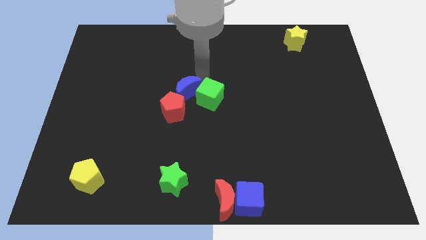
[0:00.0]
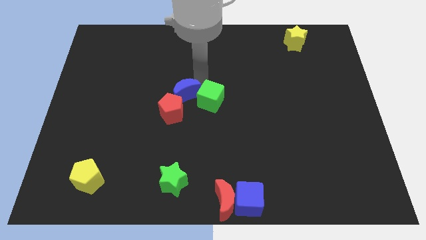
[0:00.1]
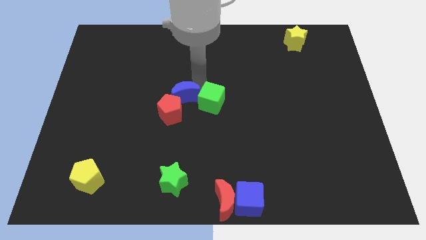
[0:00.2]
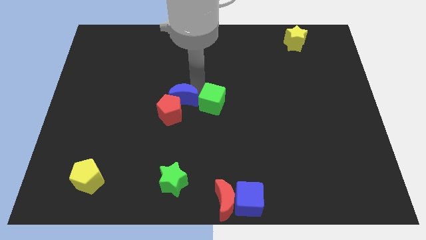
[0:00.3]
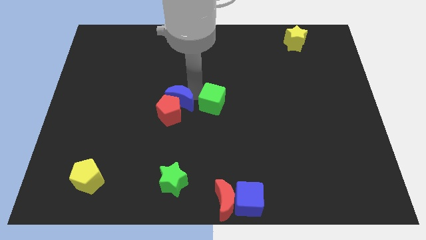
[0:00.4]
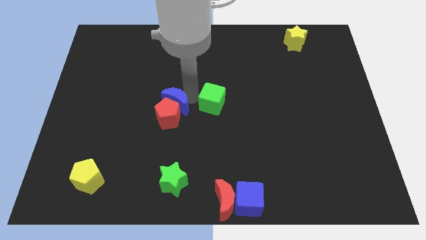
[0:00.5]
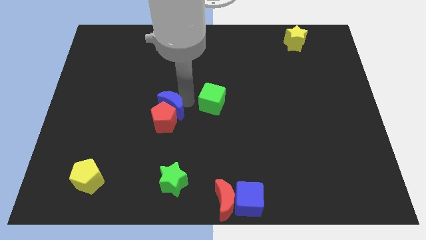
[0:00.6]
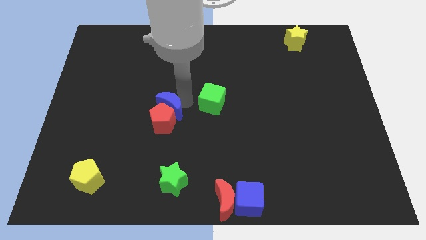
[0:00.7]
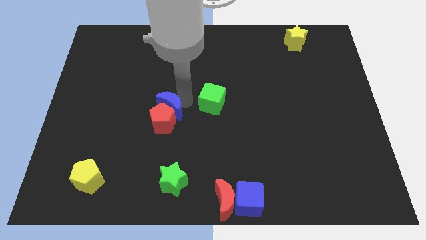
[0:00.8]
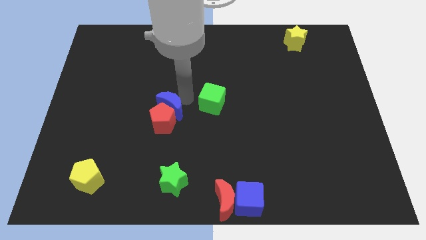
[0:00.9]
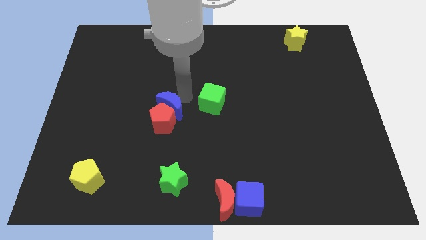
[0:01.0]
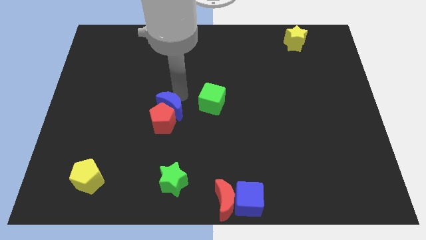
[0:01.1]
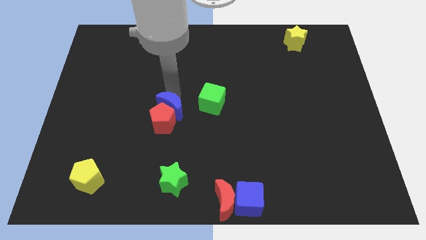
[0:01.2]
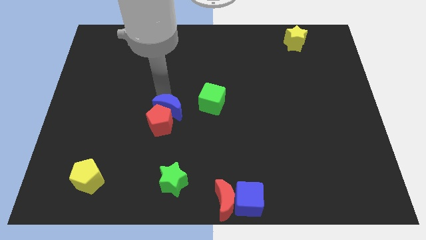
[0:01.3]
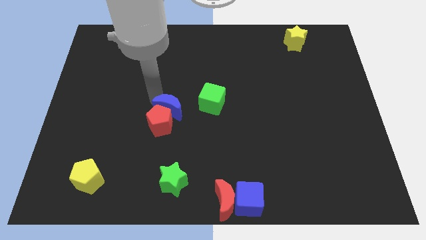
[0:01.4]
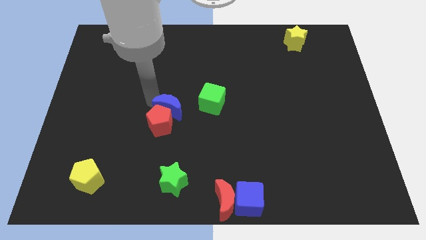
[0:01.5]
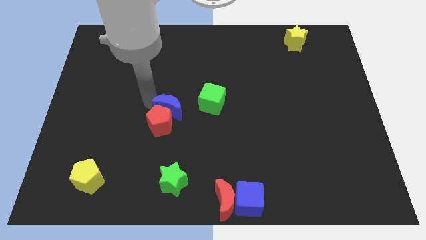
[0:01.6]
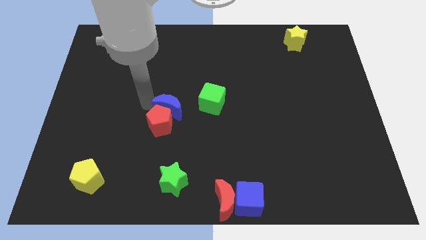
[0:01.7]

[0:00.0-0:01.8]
drag the blue moon slightly downwards

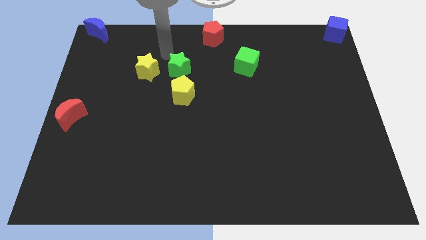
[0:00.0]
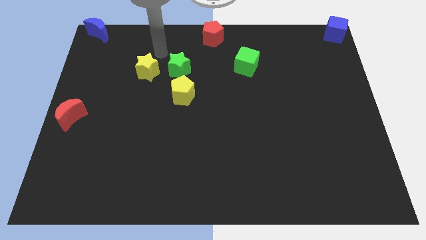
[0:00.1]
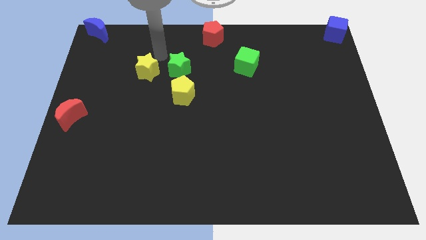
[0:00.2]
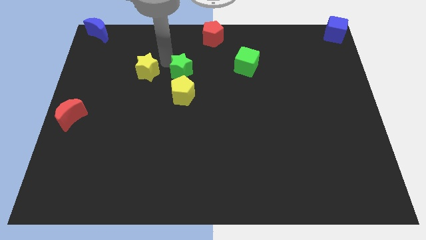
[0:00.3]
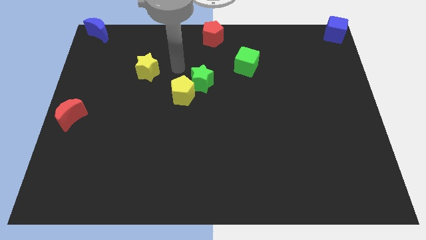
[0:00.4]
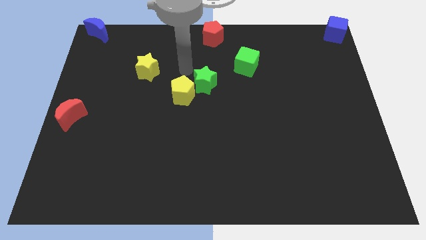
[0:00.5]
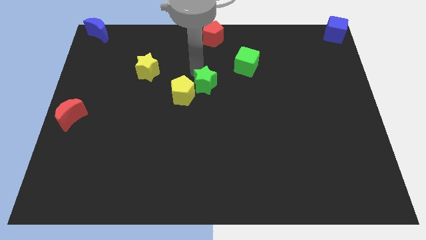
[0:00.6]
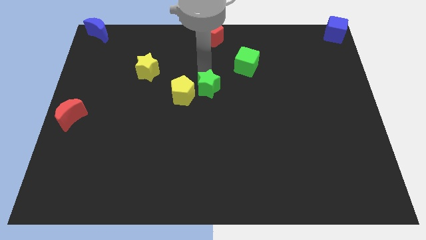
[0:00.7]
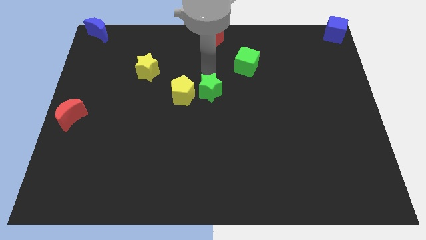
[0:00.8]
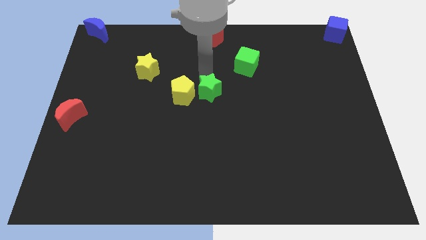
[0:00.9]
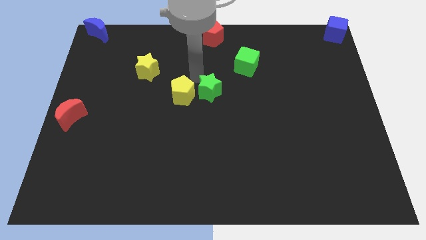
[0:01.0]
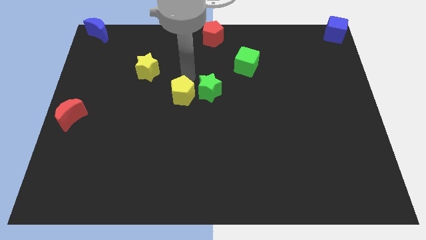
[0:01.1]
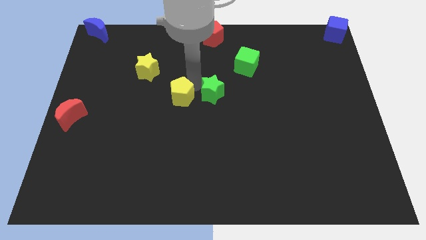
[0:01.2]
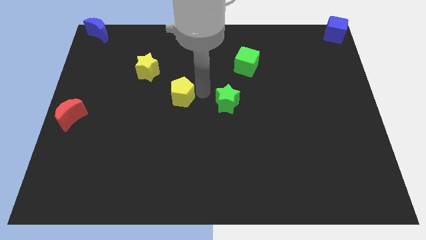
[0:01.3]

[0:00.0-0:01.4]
place the green star right to the yellow pentagon

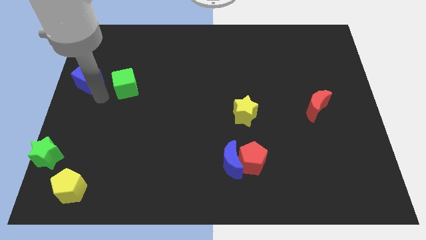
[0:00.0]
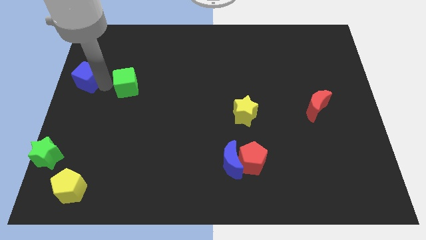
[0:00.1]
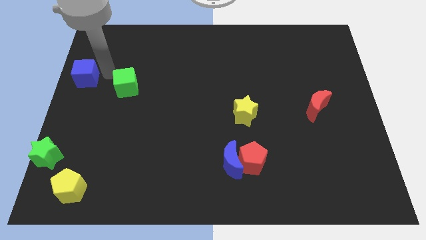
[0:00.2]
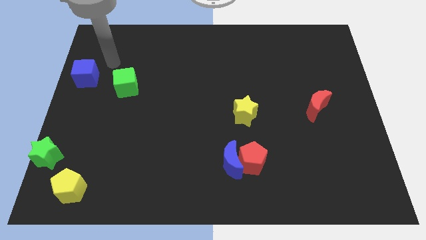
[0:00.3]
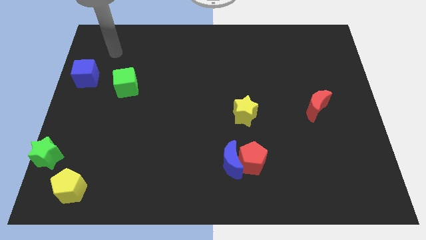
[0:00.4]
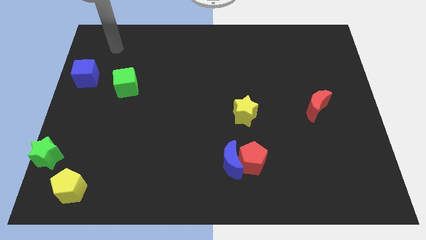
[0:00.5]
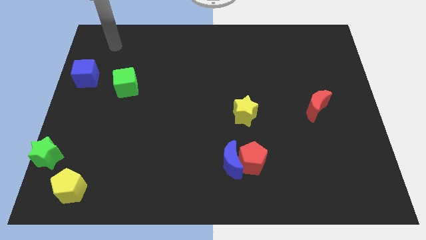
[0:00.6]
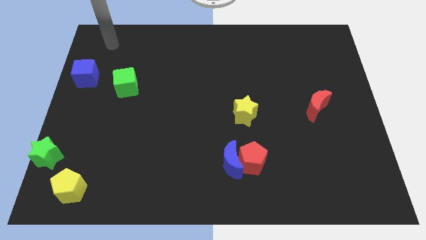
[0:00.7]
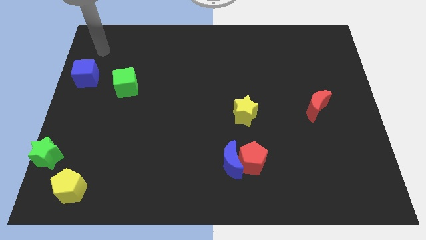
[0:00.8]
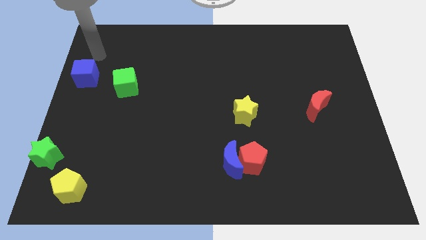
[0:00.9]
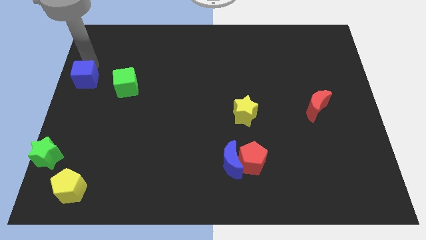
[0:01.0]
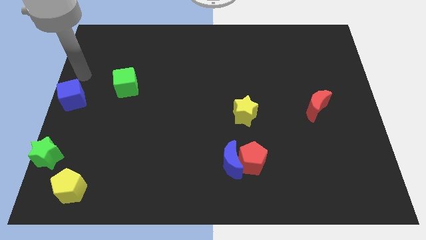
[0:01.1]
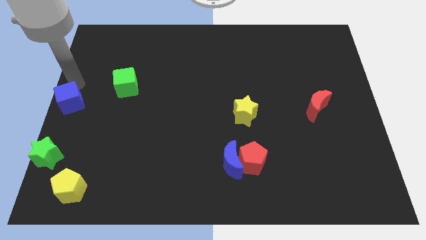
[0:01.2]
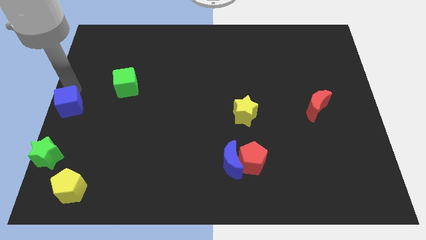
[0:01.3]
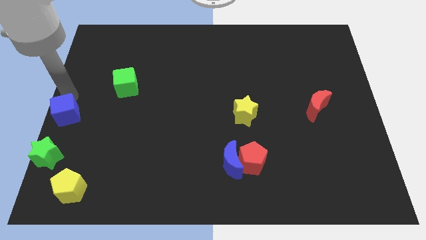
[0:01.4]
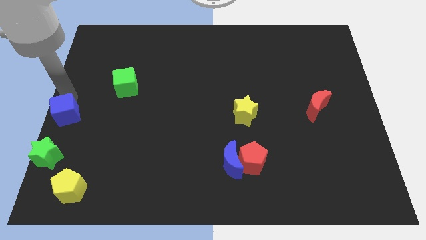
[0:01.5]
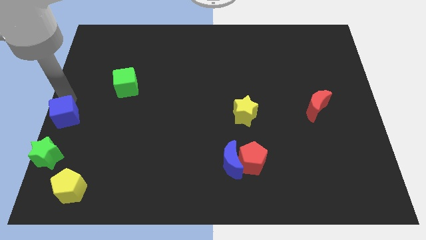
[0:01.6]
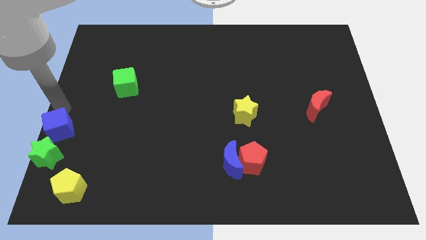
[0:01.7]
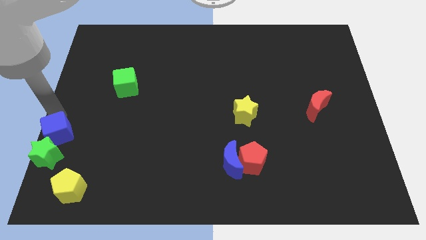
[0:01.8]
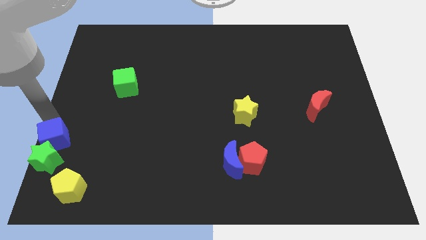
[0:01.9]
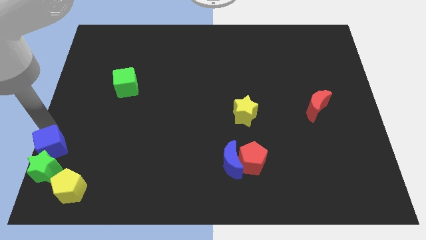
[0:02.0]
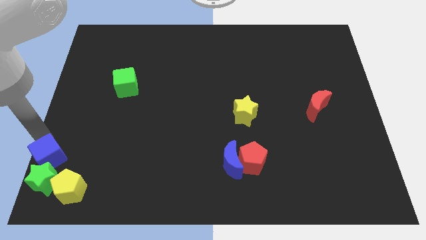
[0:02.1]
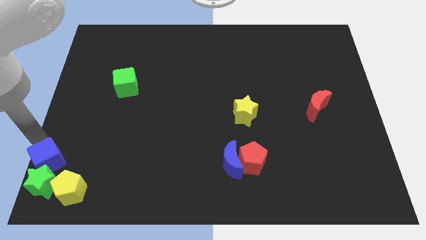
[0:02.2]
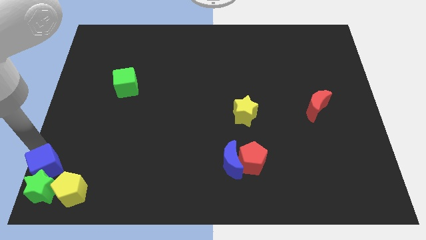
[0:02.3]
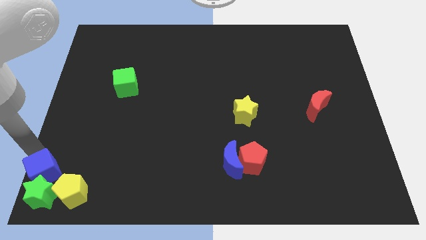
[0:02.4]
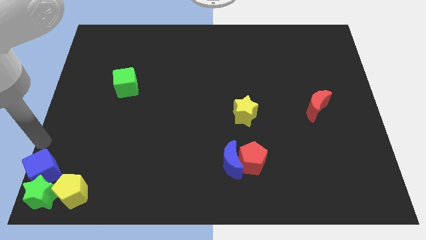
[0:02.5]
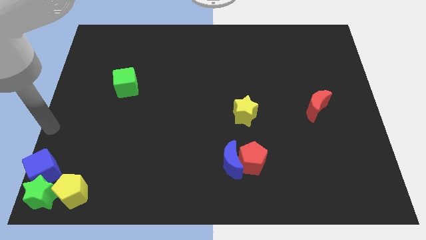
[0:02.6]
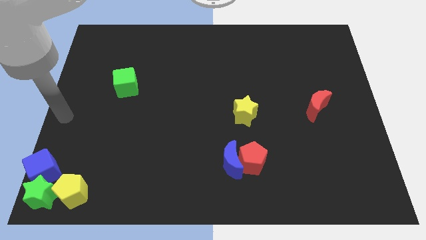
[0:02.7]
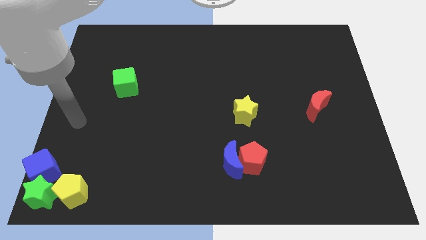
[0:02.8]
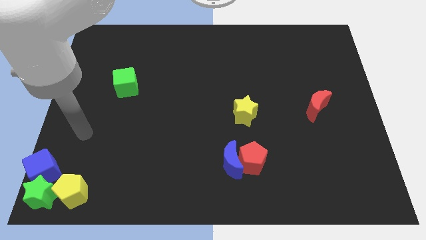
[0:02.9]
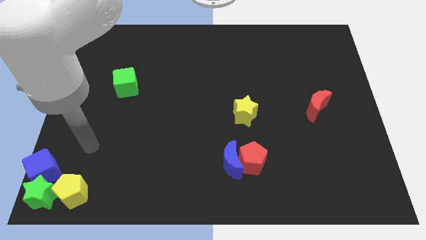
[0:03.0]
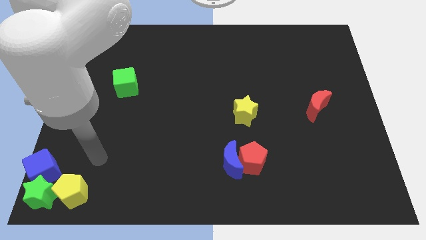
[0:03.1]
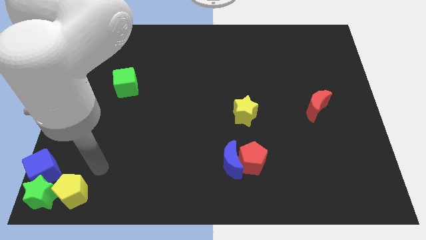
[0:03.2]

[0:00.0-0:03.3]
push the blue cube into the green star

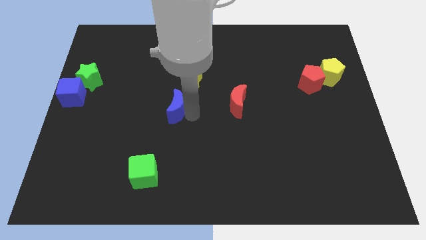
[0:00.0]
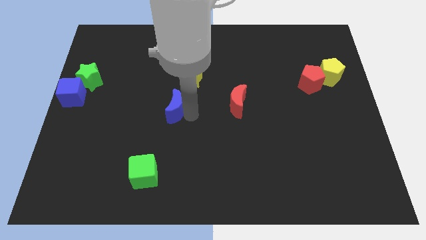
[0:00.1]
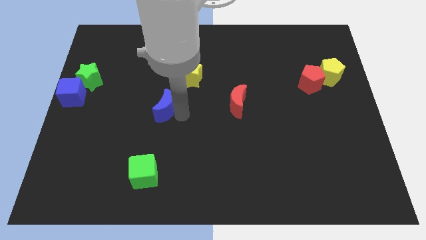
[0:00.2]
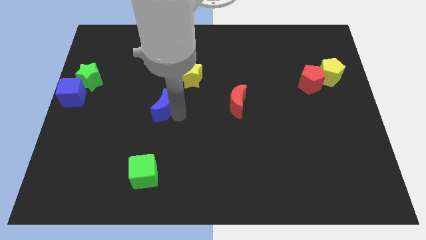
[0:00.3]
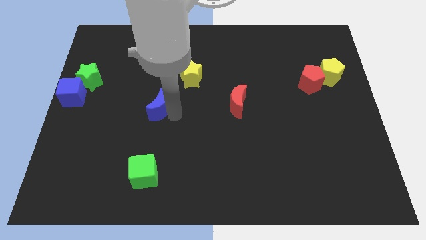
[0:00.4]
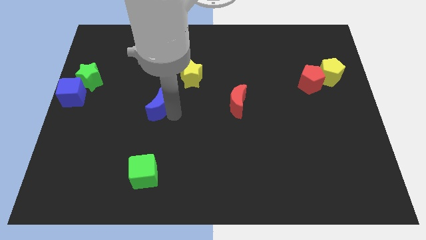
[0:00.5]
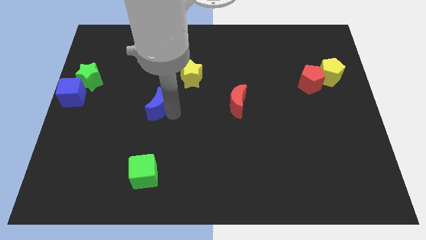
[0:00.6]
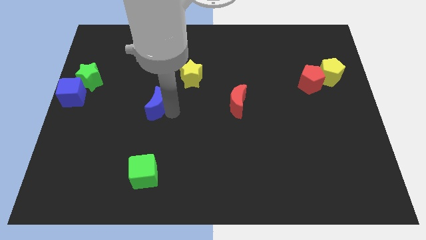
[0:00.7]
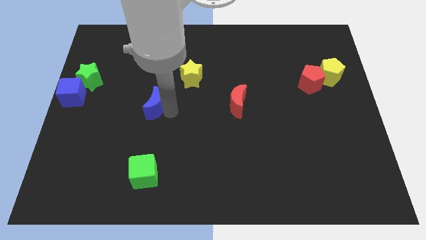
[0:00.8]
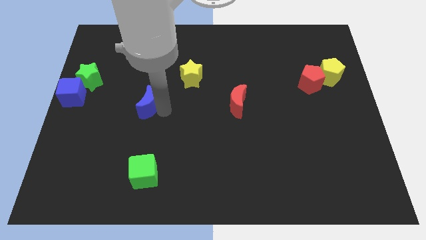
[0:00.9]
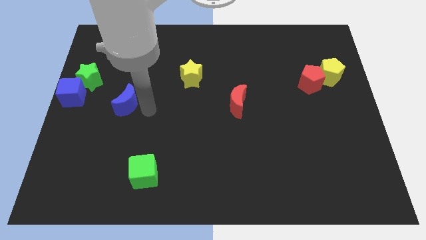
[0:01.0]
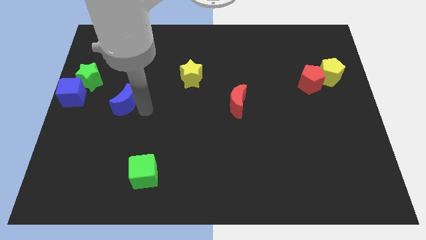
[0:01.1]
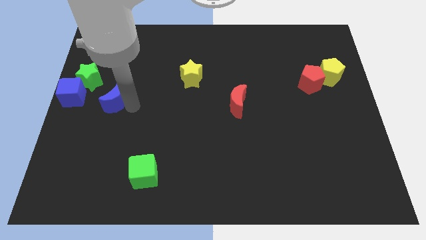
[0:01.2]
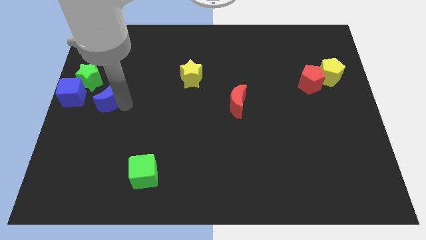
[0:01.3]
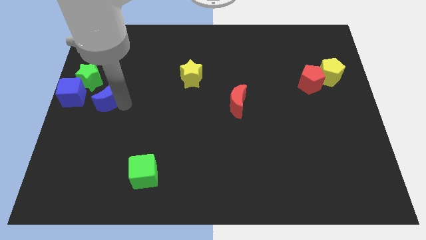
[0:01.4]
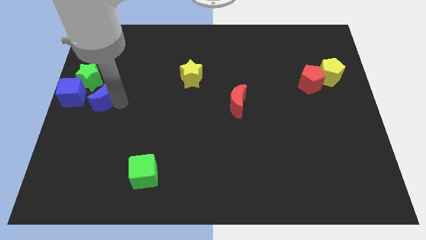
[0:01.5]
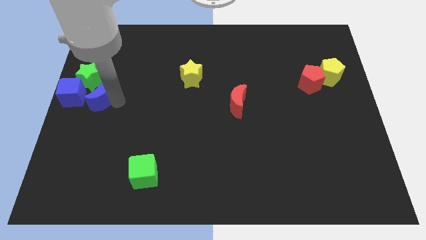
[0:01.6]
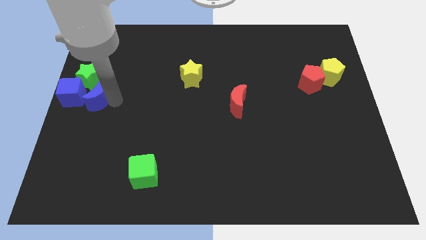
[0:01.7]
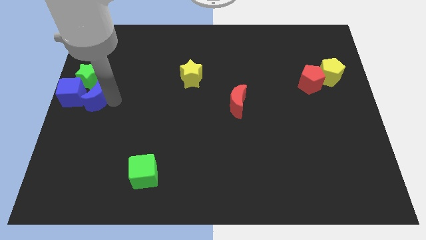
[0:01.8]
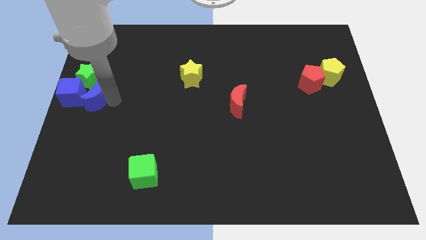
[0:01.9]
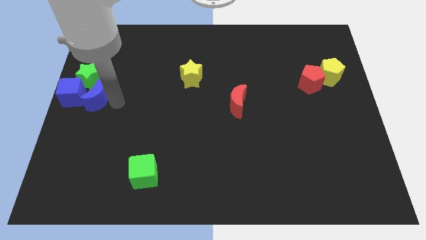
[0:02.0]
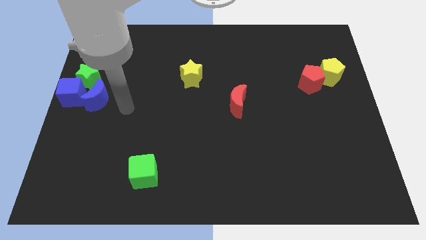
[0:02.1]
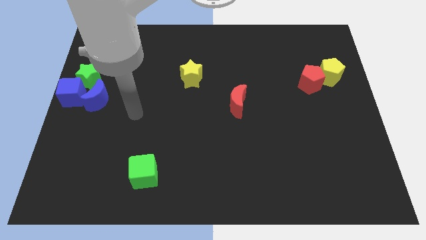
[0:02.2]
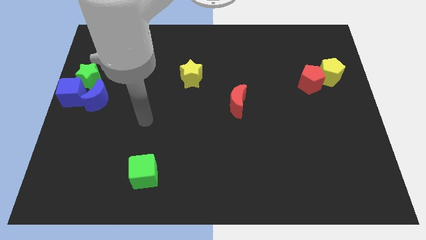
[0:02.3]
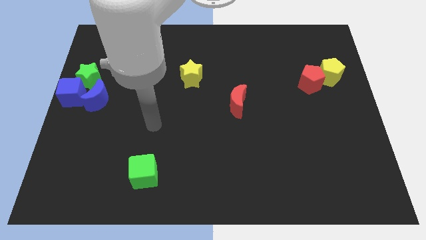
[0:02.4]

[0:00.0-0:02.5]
push the blue moon into blue cube
